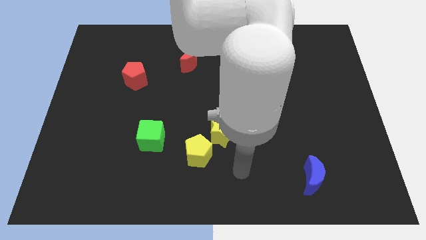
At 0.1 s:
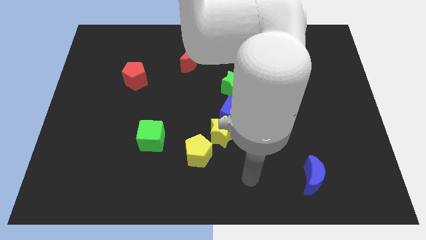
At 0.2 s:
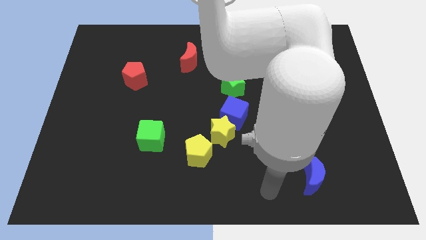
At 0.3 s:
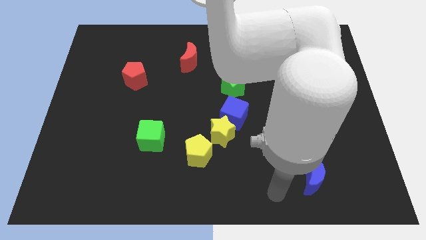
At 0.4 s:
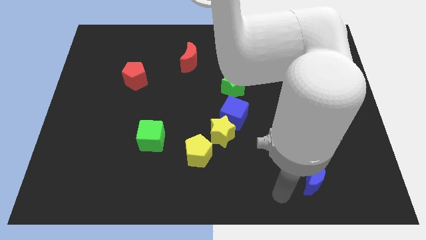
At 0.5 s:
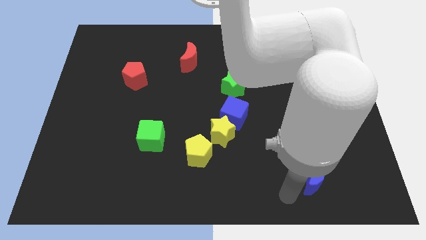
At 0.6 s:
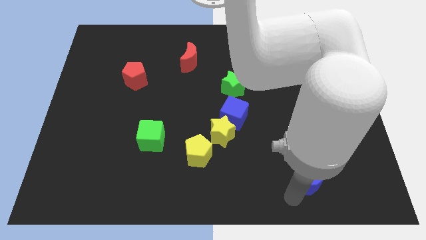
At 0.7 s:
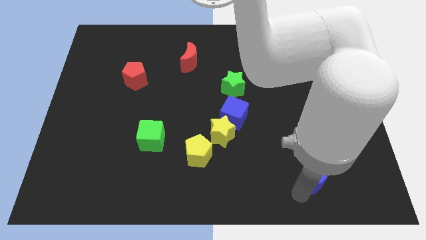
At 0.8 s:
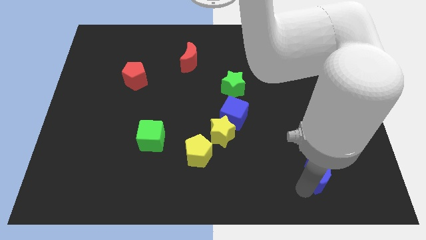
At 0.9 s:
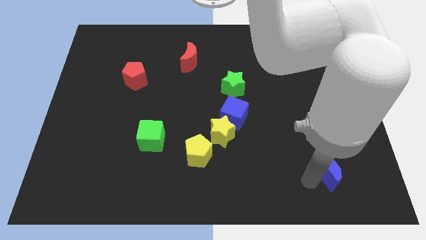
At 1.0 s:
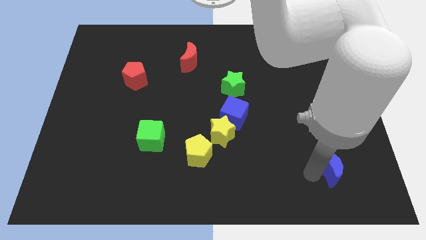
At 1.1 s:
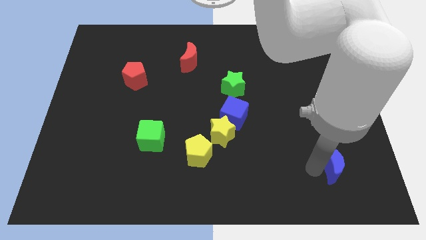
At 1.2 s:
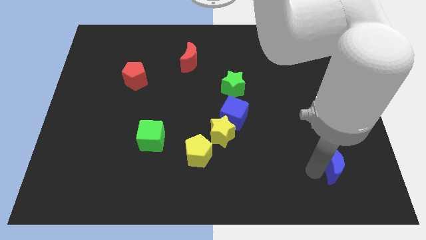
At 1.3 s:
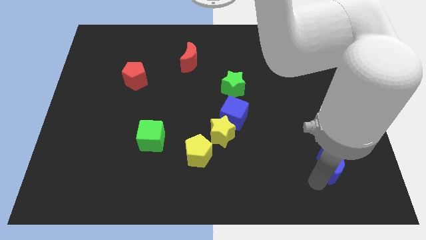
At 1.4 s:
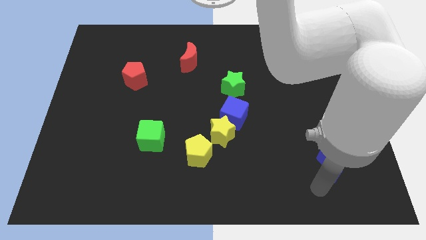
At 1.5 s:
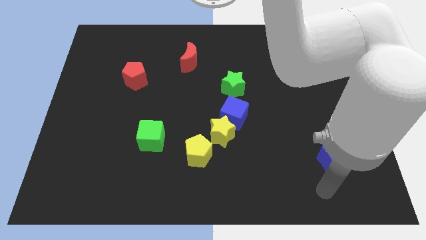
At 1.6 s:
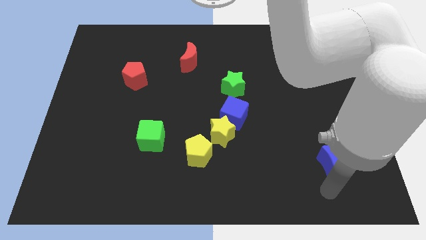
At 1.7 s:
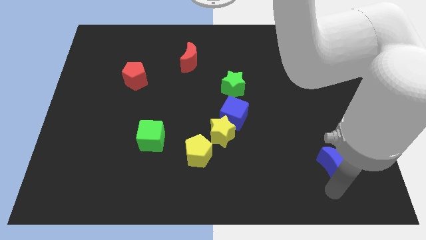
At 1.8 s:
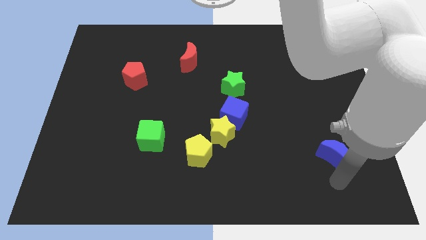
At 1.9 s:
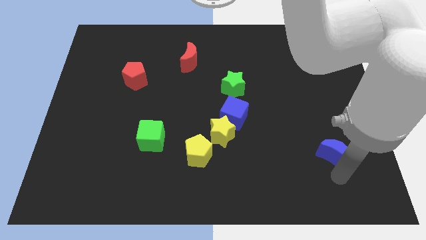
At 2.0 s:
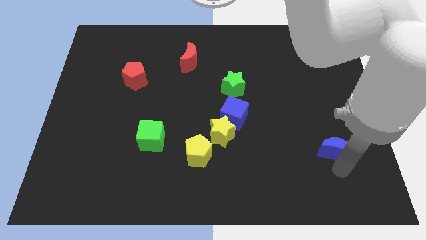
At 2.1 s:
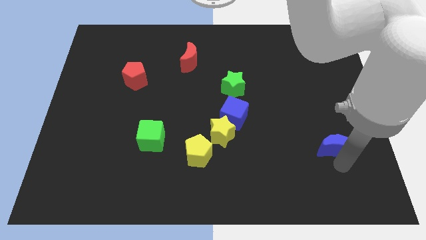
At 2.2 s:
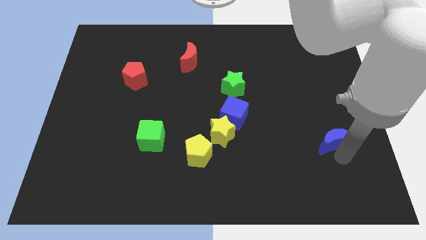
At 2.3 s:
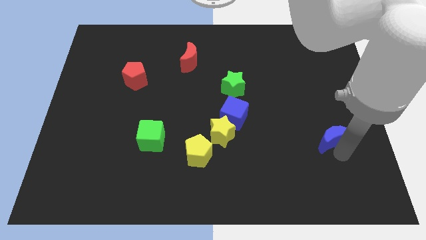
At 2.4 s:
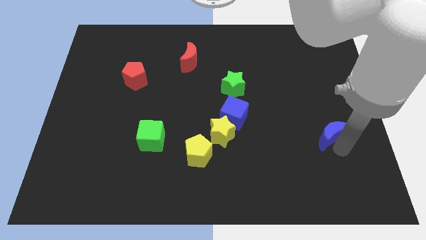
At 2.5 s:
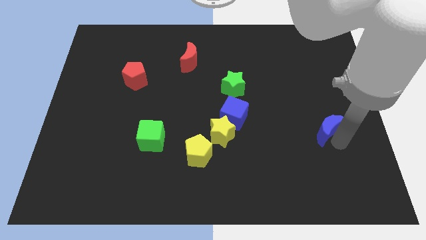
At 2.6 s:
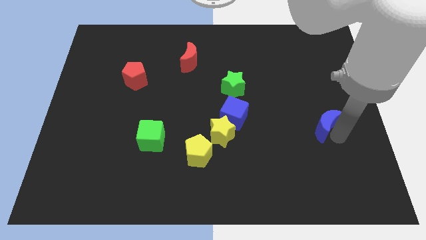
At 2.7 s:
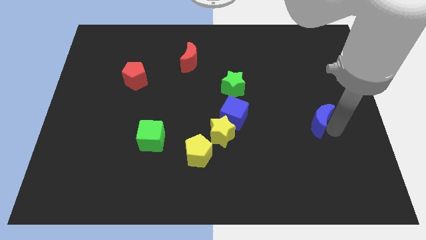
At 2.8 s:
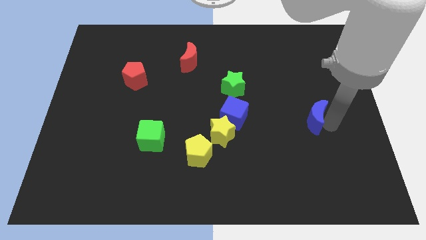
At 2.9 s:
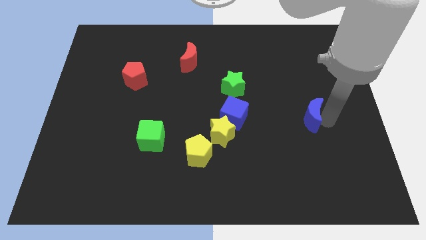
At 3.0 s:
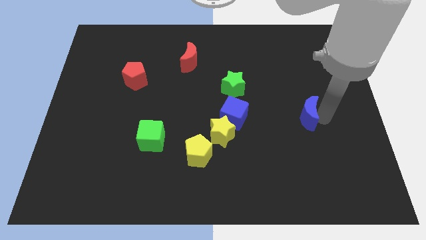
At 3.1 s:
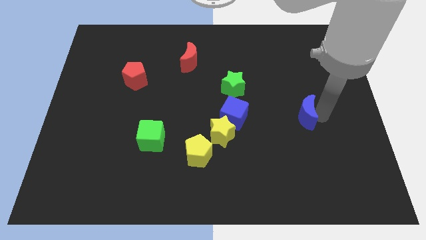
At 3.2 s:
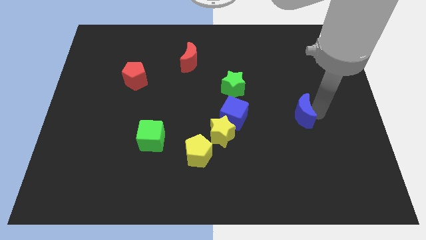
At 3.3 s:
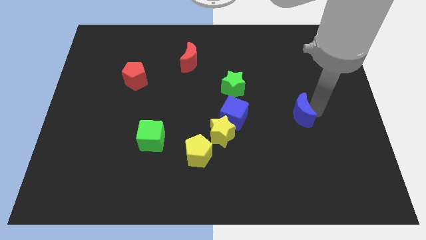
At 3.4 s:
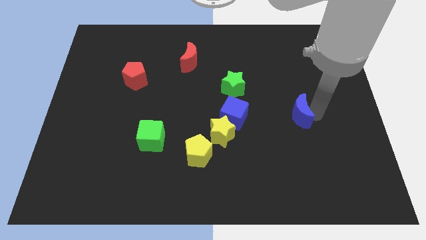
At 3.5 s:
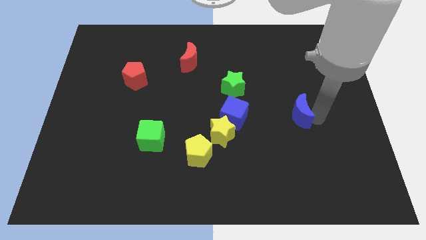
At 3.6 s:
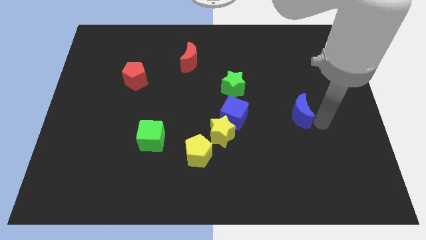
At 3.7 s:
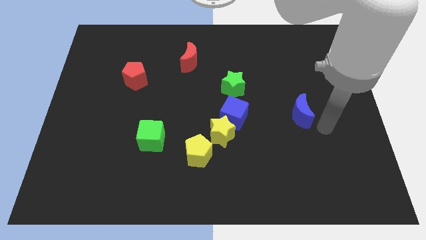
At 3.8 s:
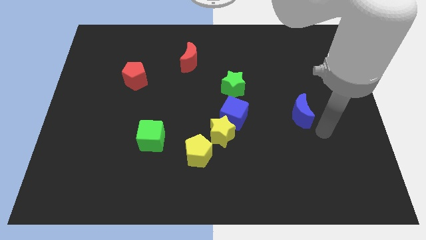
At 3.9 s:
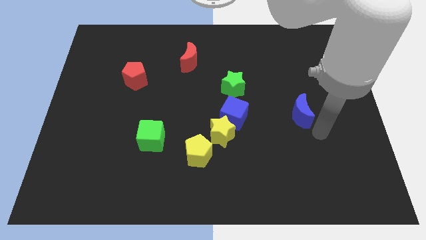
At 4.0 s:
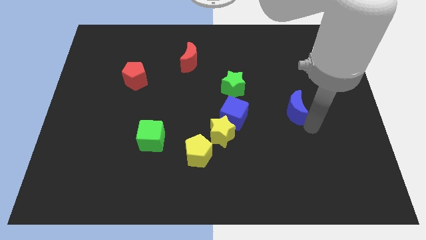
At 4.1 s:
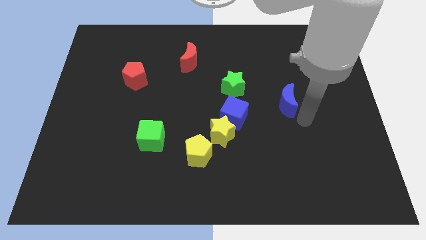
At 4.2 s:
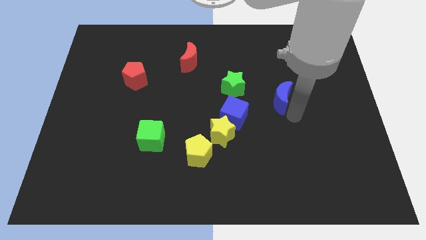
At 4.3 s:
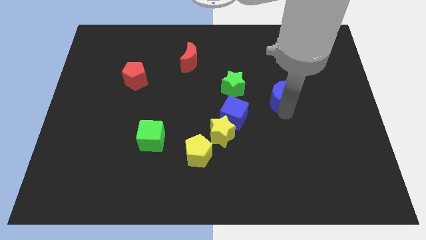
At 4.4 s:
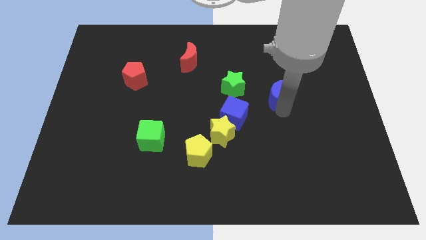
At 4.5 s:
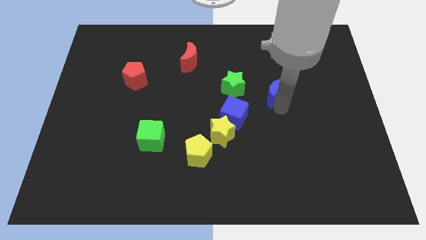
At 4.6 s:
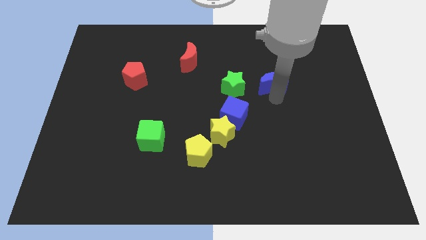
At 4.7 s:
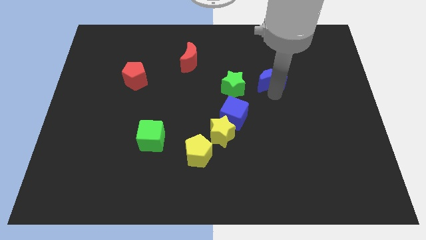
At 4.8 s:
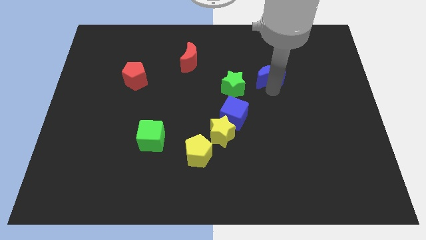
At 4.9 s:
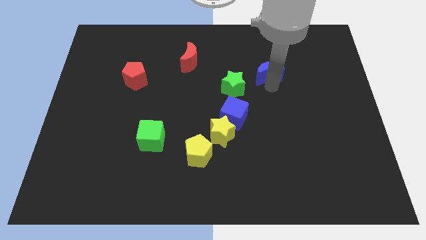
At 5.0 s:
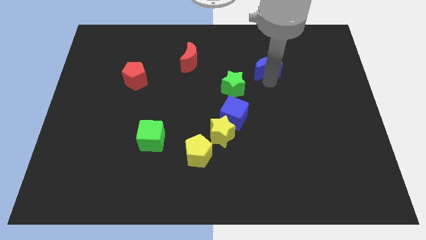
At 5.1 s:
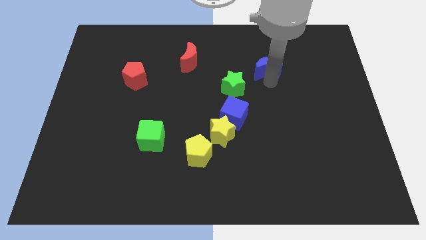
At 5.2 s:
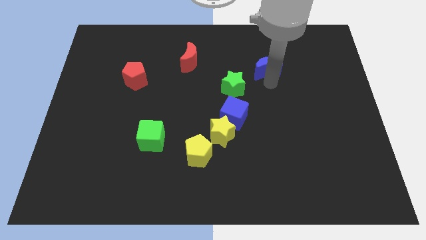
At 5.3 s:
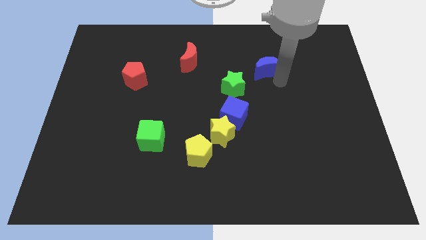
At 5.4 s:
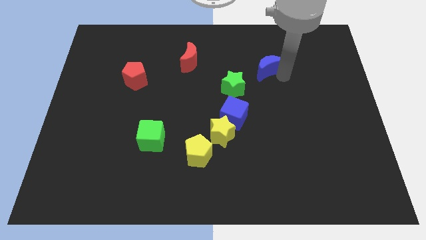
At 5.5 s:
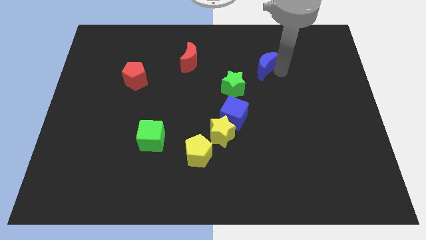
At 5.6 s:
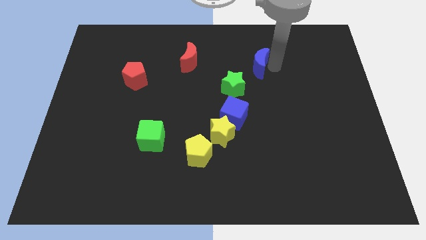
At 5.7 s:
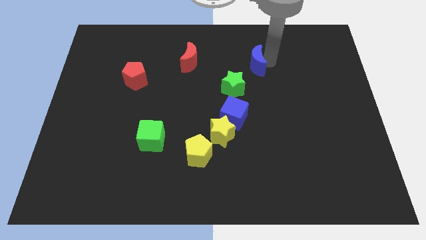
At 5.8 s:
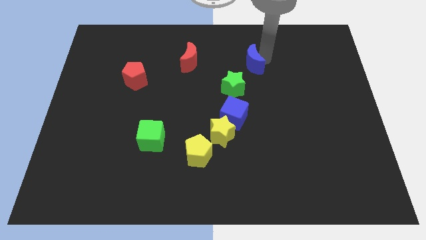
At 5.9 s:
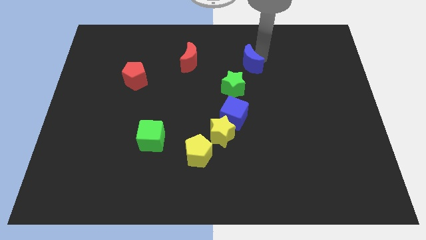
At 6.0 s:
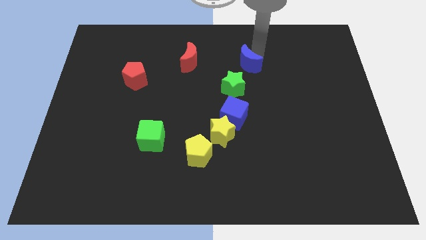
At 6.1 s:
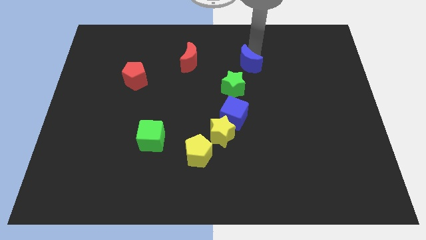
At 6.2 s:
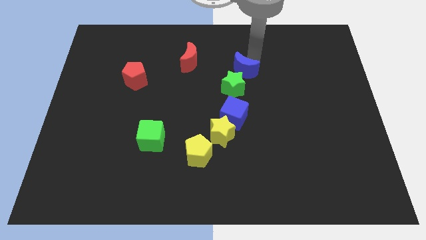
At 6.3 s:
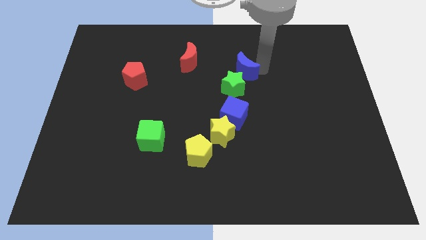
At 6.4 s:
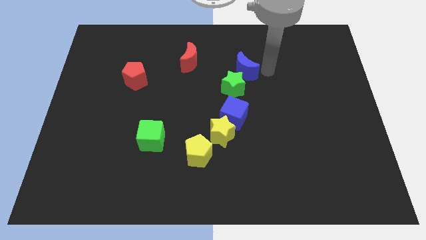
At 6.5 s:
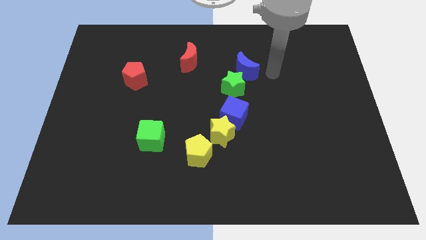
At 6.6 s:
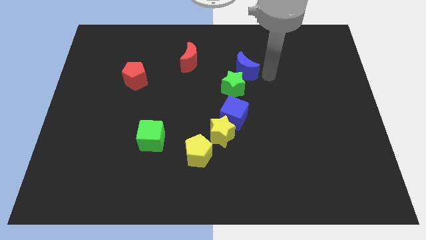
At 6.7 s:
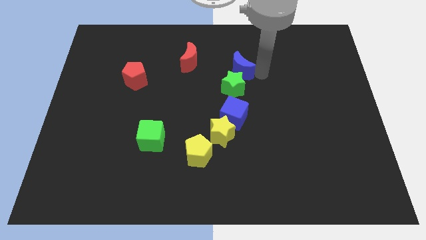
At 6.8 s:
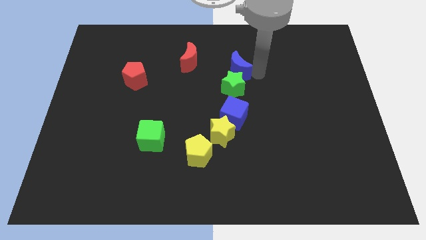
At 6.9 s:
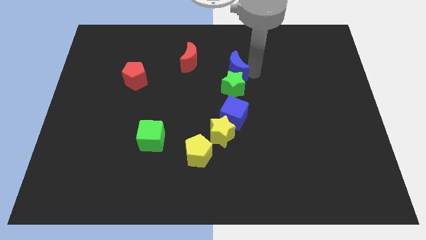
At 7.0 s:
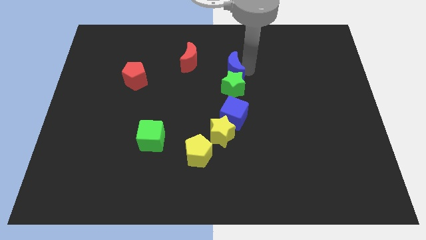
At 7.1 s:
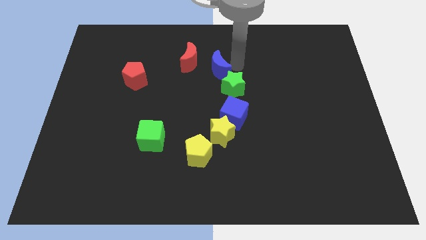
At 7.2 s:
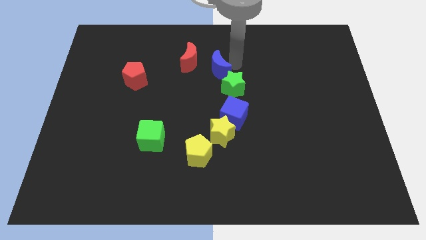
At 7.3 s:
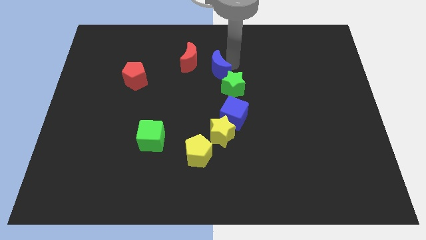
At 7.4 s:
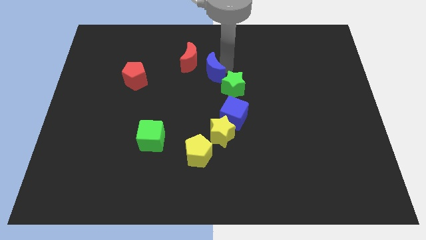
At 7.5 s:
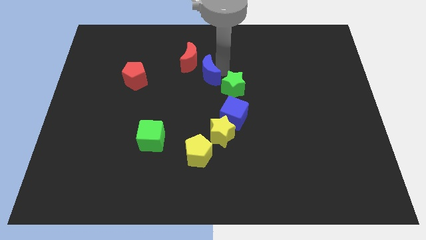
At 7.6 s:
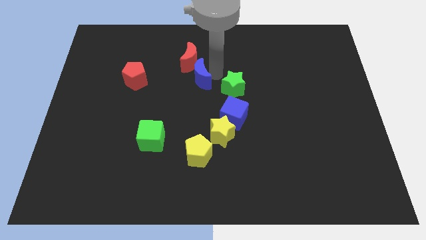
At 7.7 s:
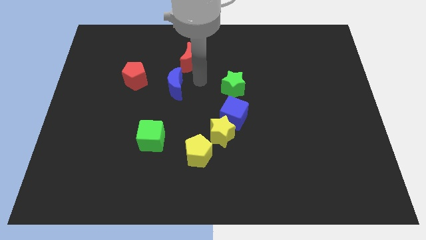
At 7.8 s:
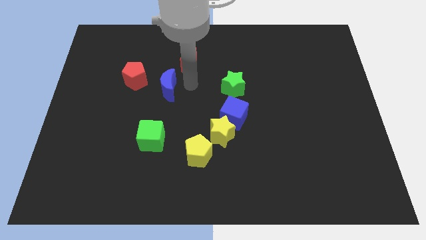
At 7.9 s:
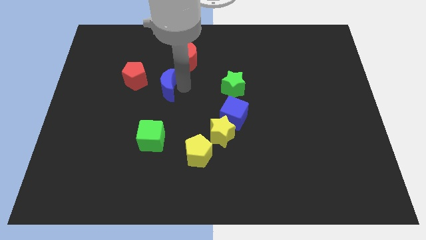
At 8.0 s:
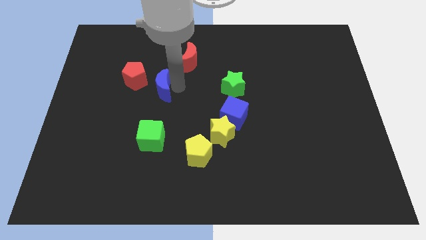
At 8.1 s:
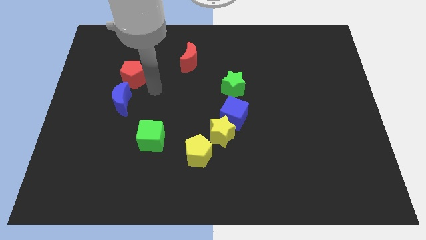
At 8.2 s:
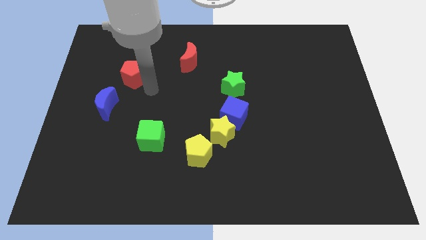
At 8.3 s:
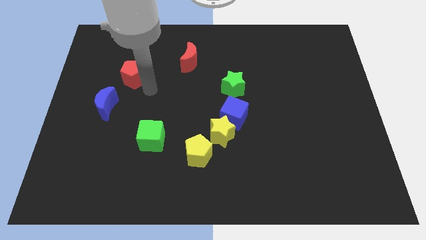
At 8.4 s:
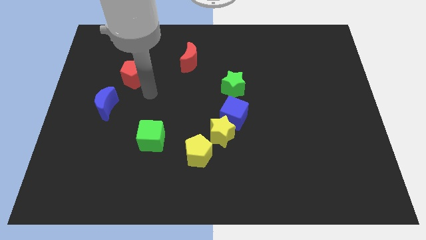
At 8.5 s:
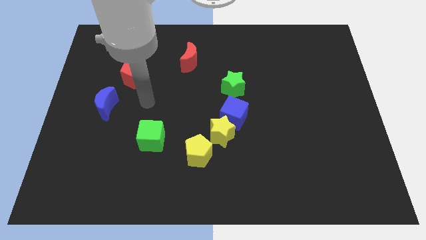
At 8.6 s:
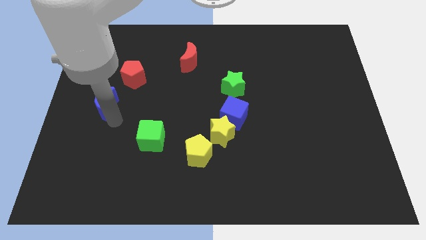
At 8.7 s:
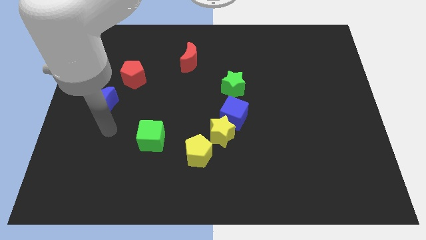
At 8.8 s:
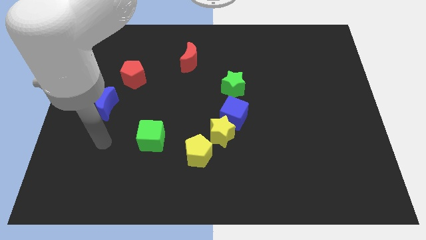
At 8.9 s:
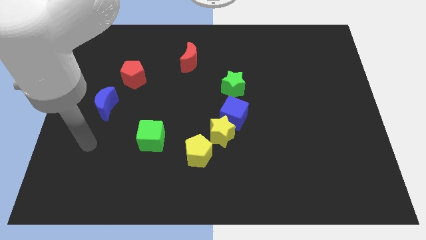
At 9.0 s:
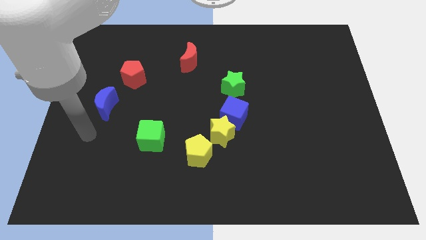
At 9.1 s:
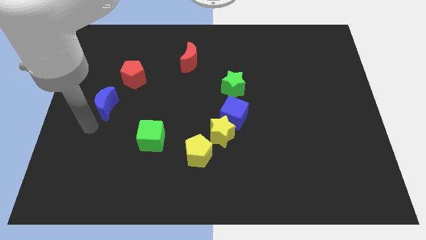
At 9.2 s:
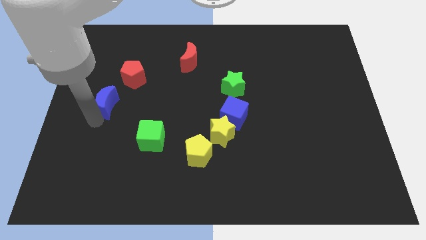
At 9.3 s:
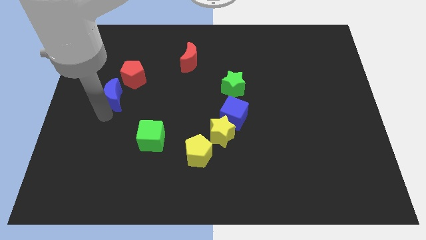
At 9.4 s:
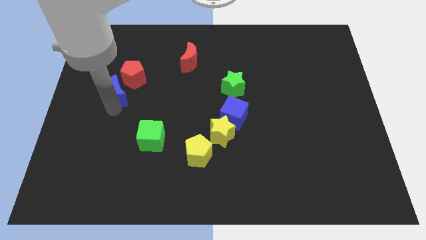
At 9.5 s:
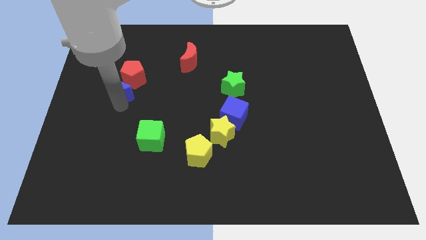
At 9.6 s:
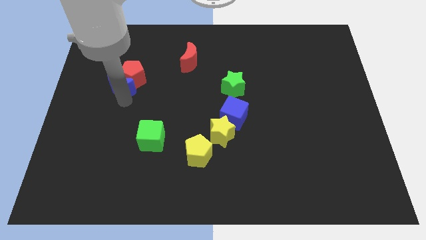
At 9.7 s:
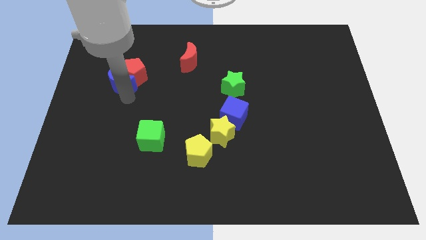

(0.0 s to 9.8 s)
put the blue moon to the red pentagon
